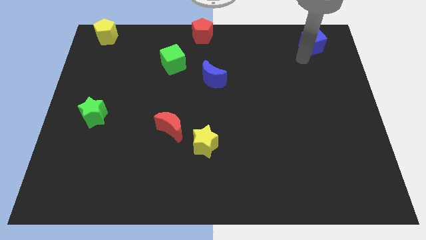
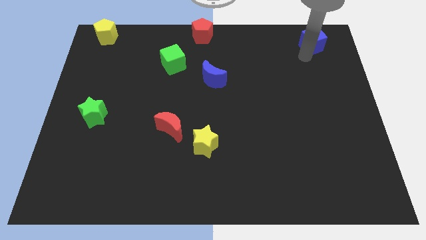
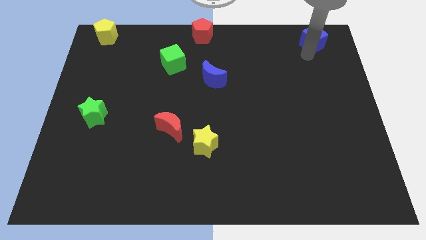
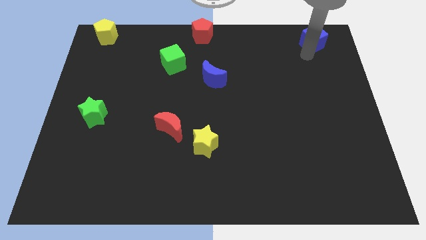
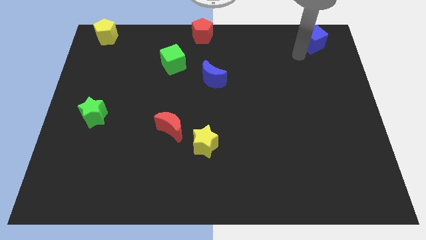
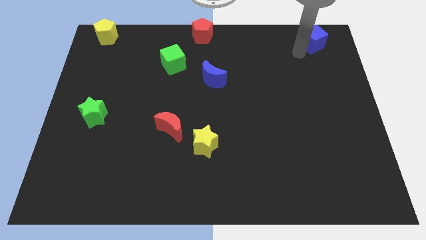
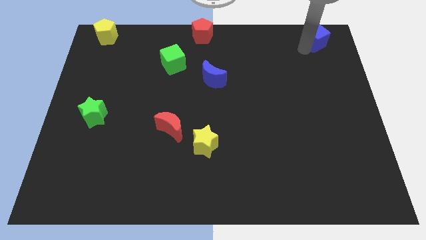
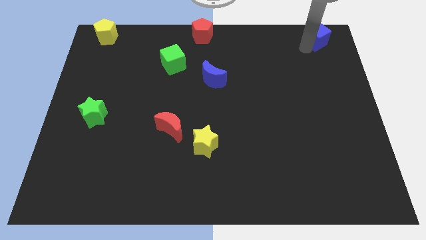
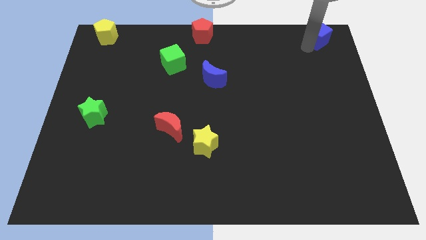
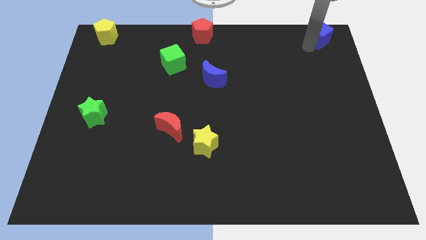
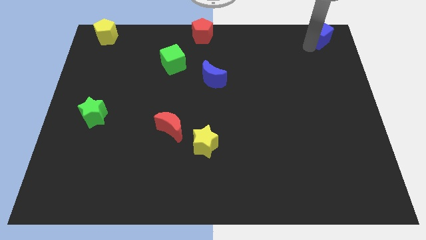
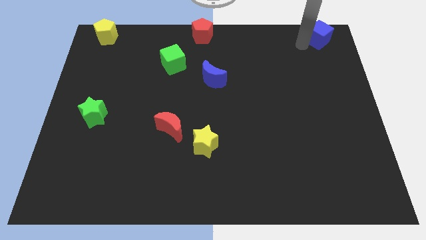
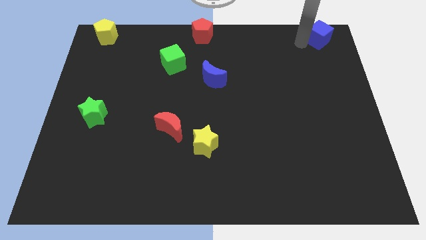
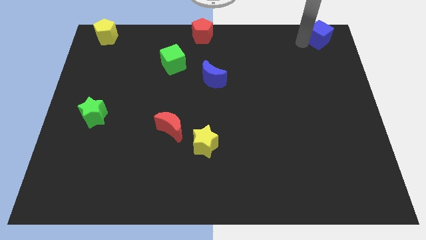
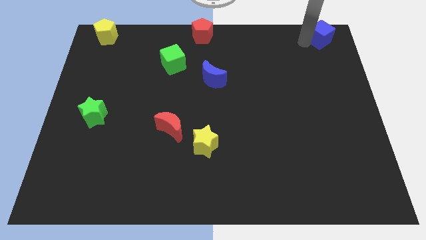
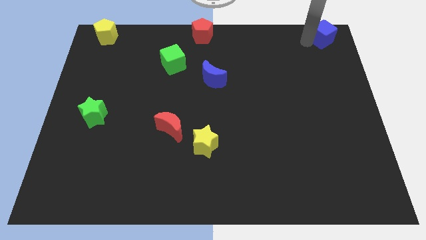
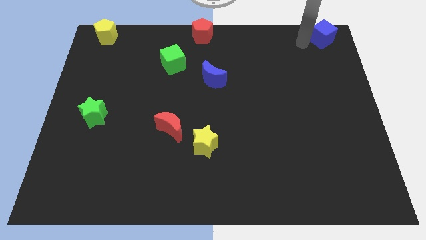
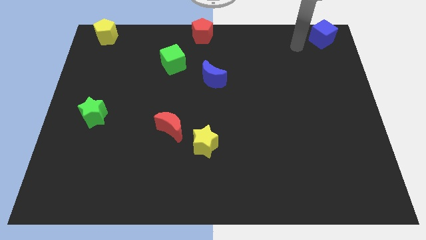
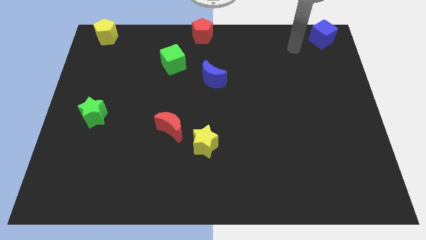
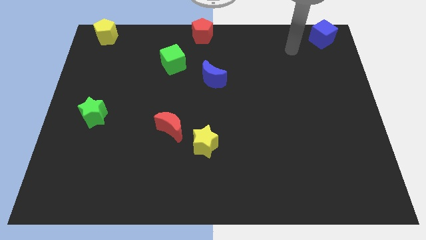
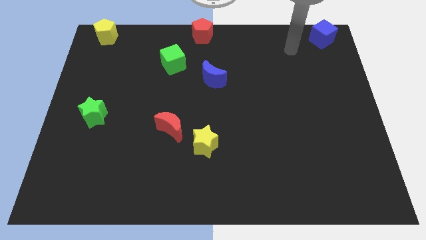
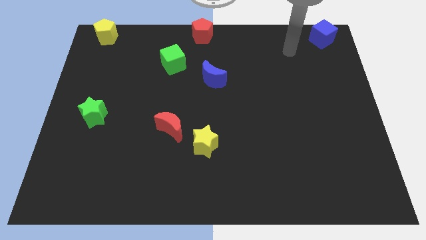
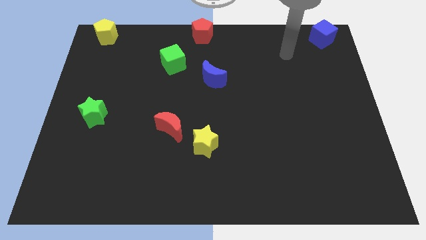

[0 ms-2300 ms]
push the blue cube to the top right corner of the board

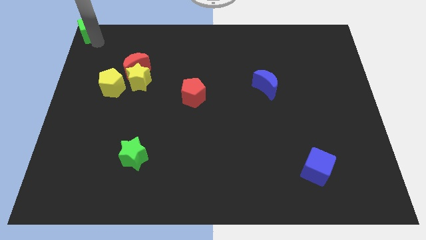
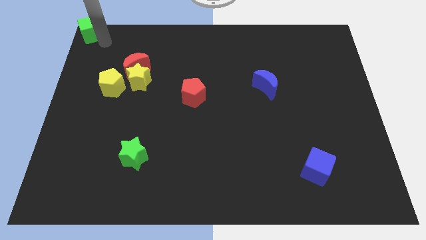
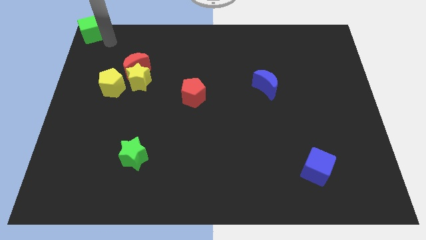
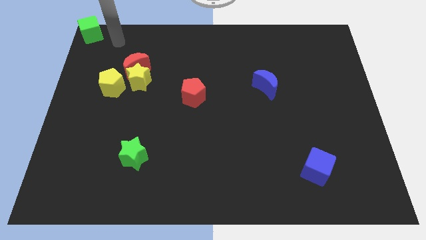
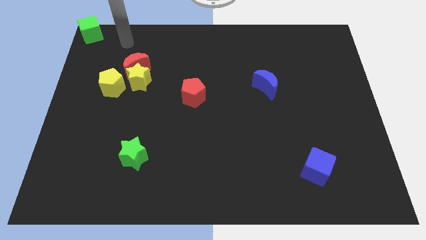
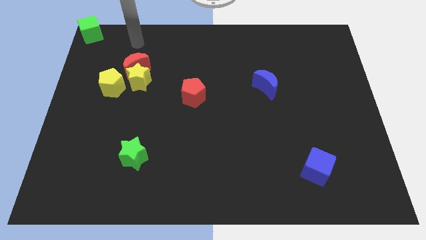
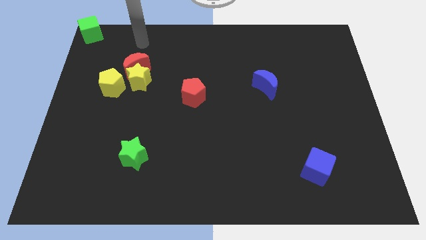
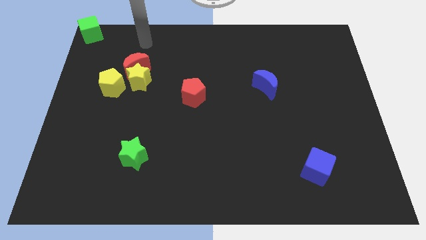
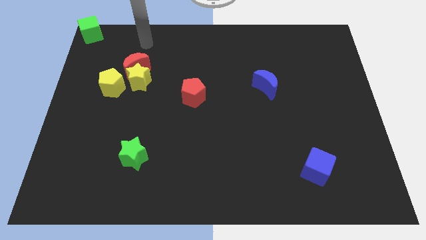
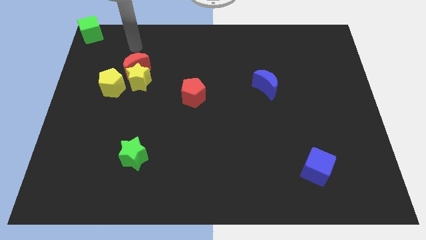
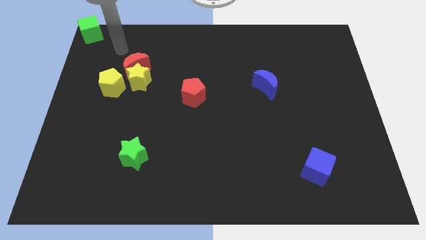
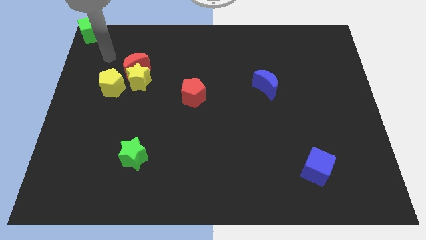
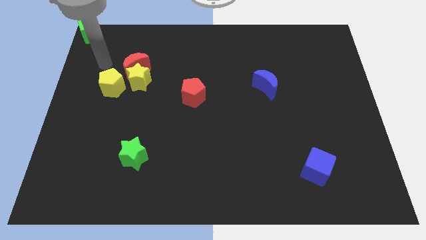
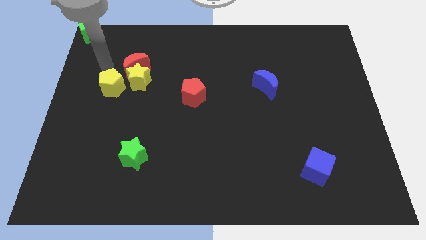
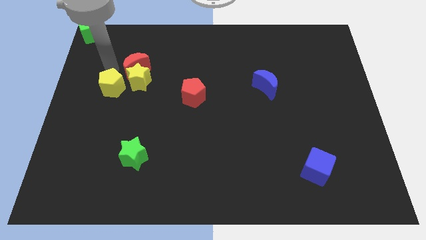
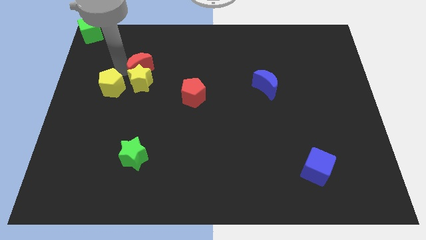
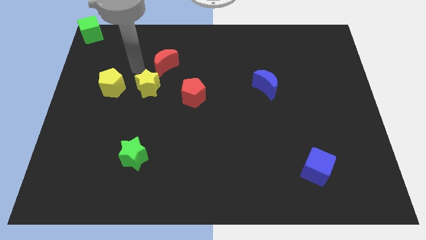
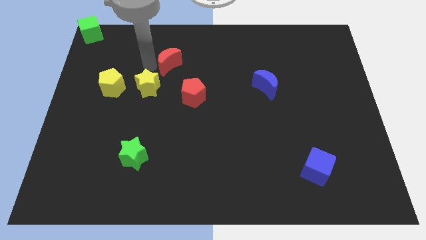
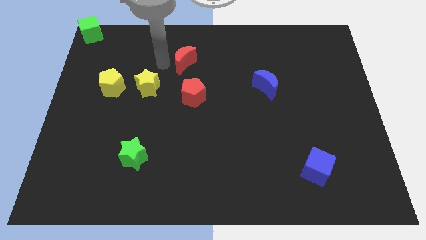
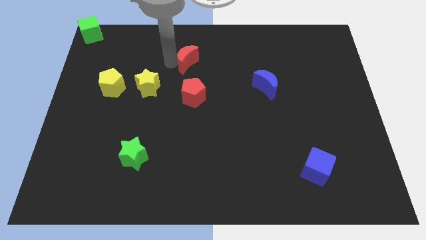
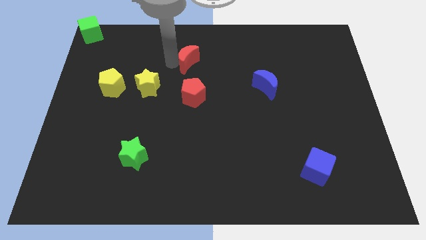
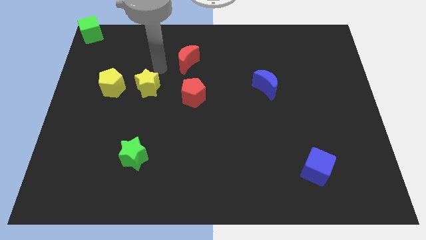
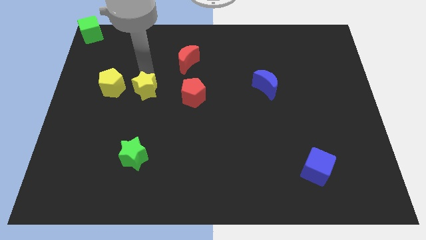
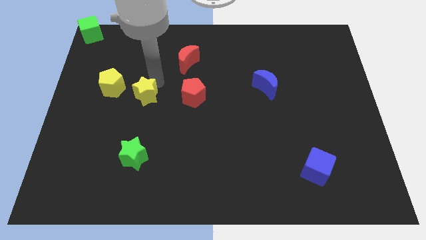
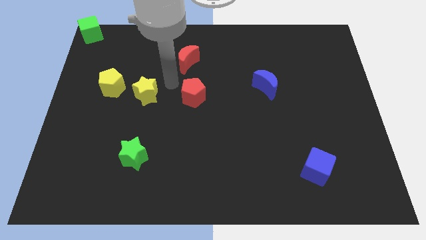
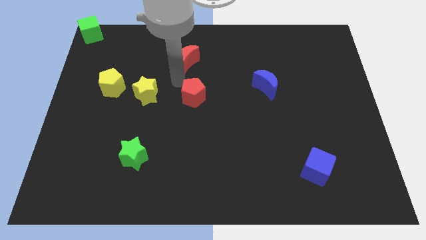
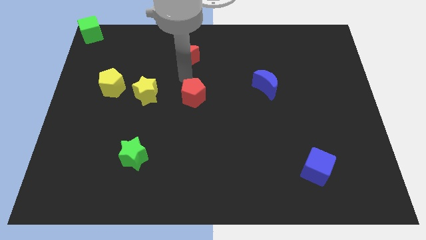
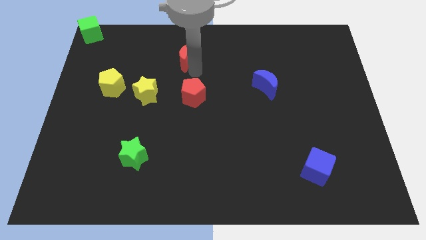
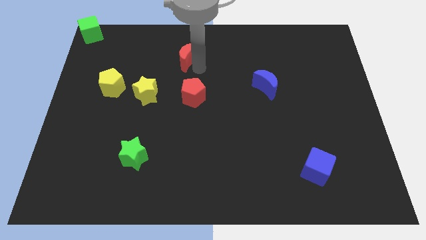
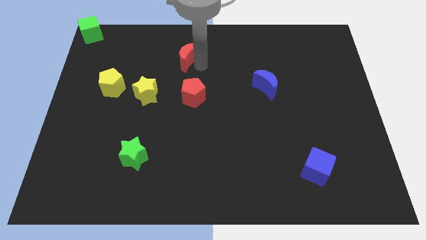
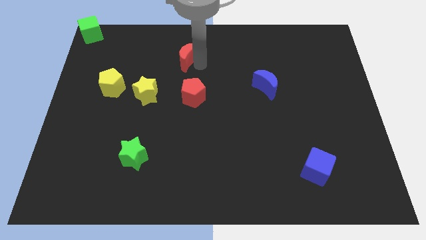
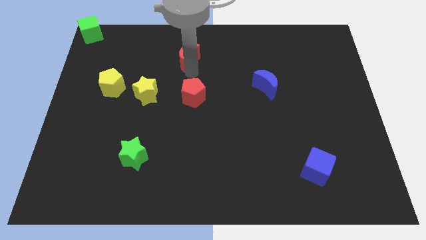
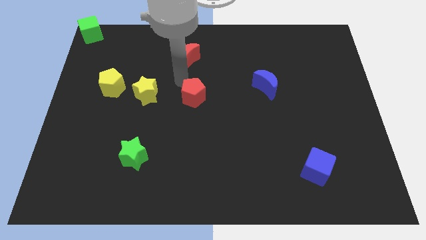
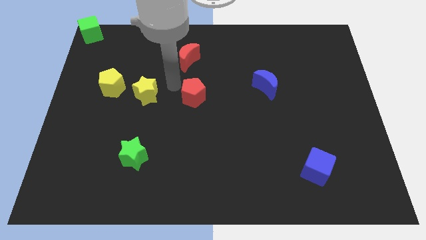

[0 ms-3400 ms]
move the red moon to the top of red pentagon

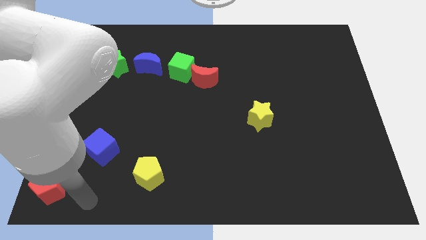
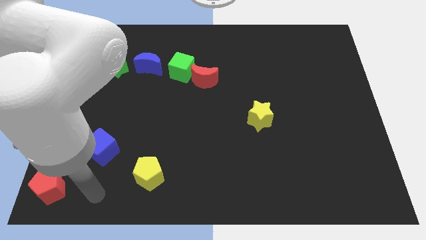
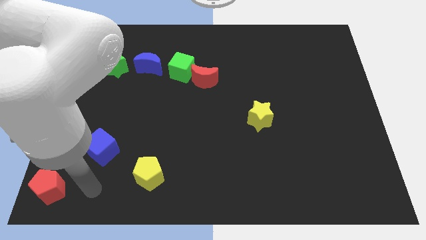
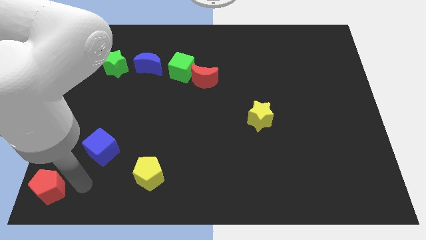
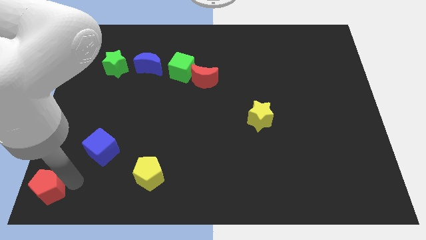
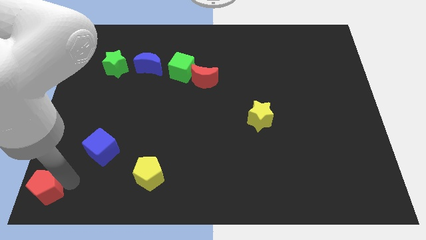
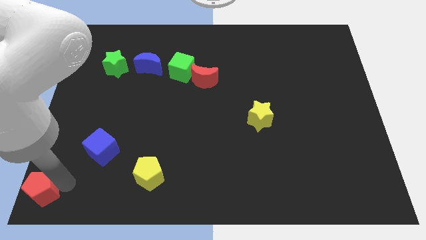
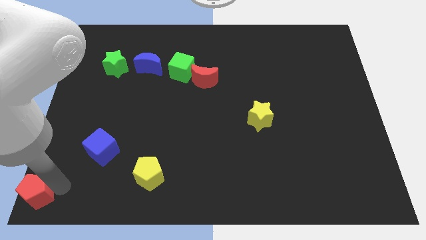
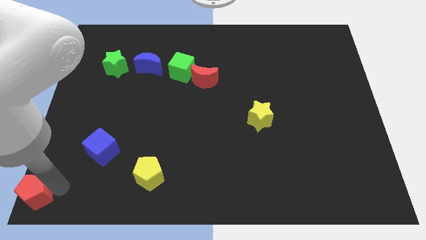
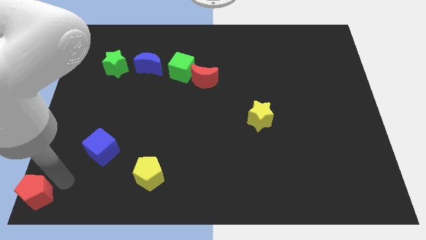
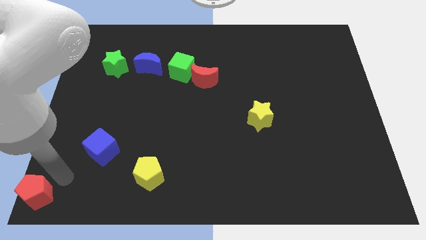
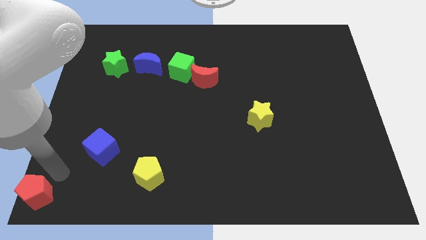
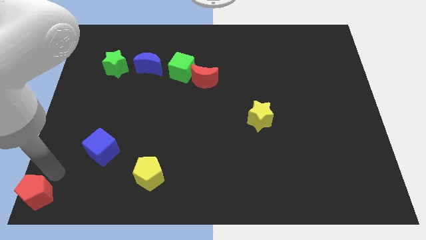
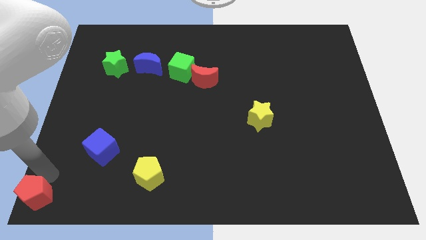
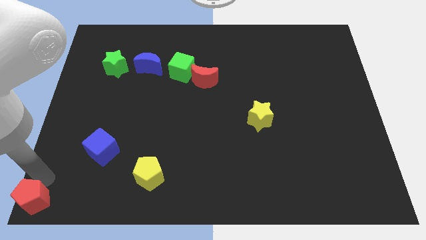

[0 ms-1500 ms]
move the red pentagon to the bottom left corner

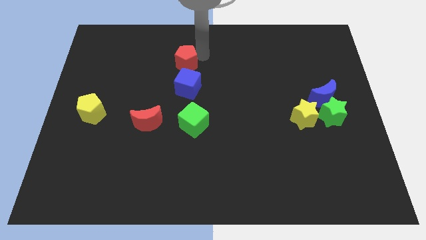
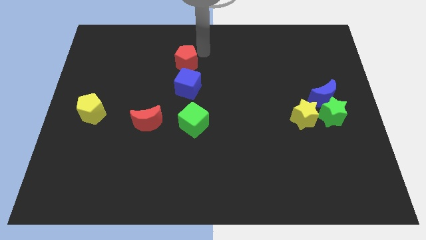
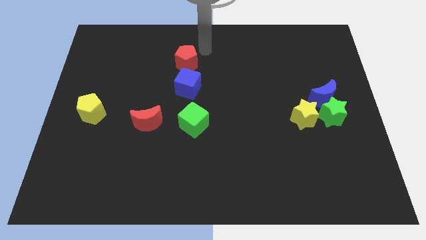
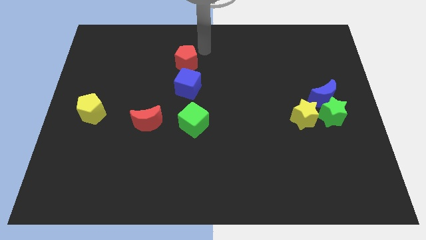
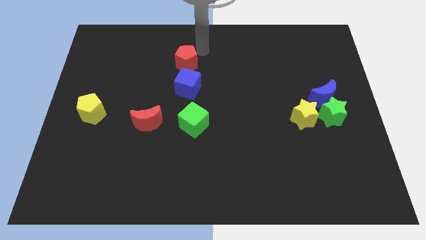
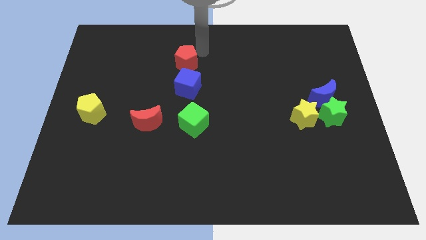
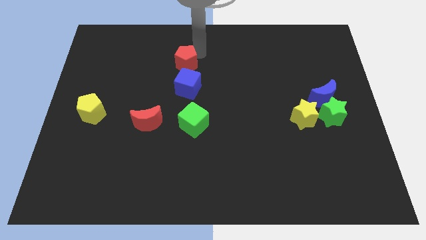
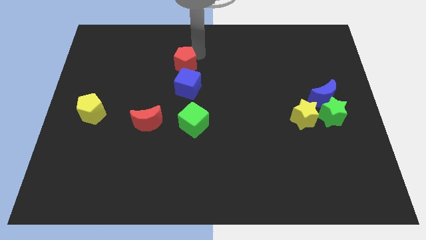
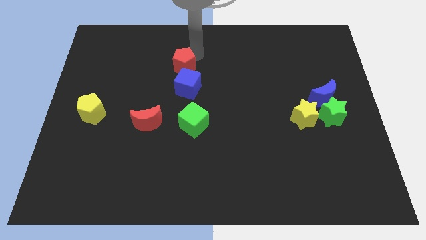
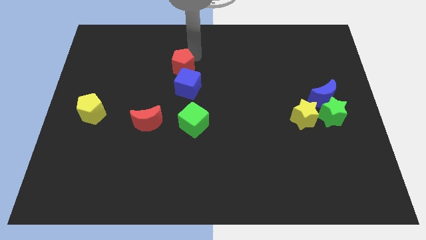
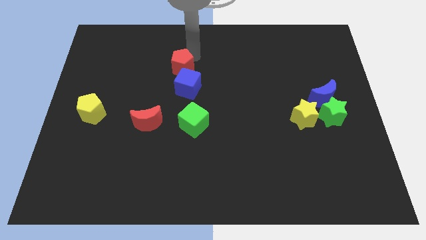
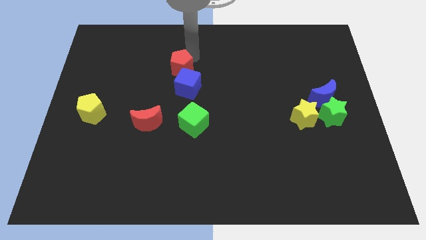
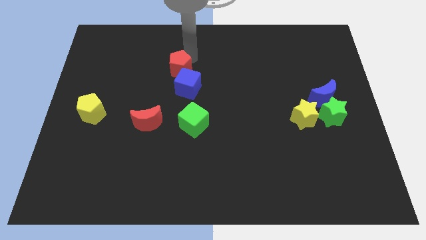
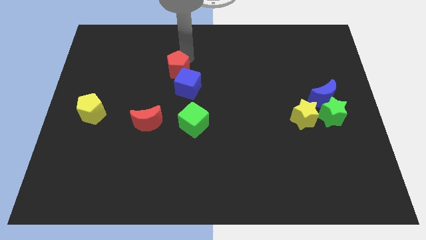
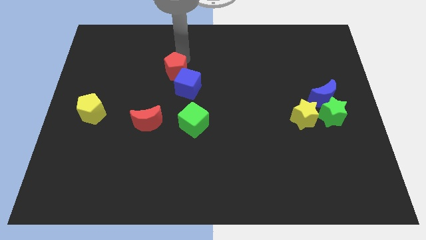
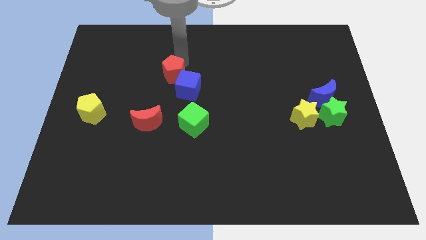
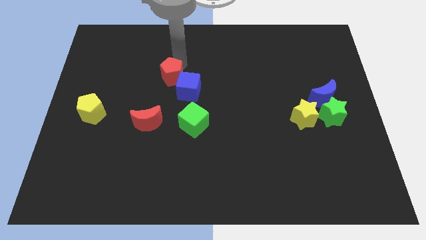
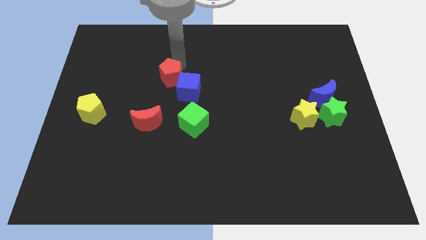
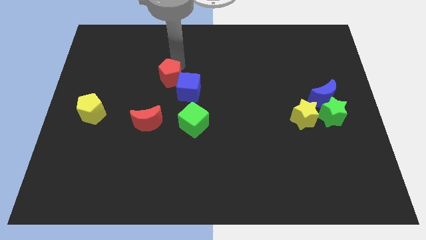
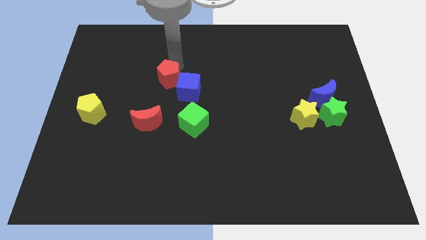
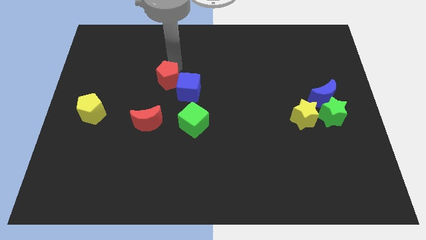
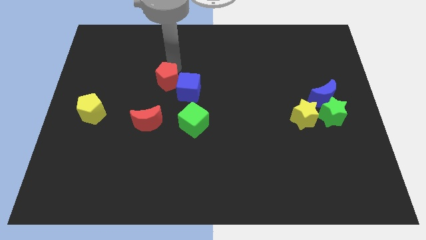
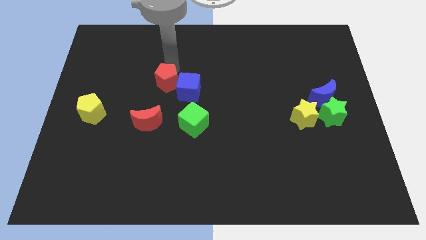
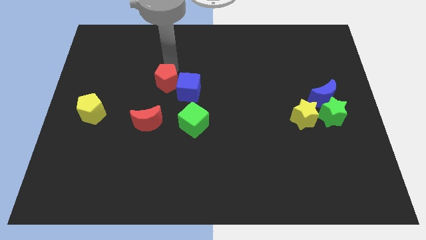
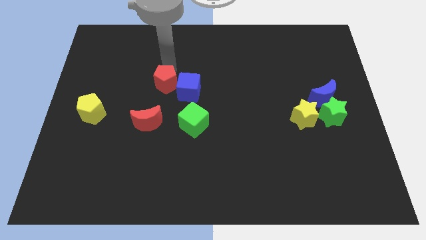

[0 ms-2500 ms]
place the red pentagon at the left side of the blue cube
